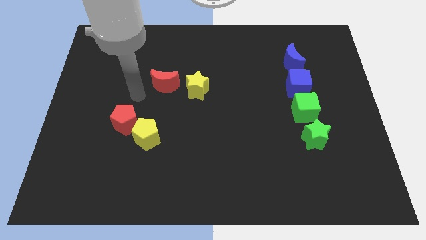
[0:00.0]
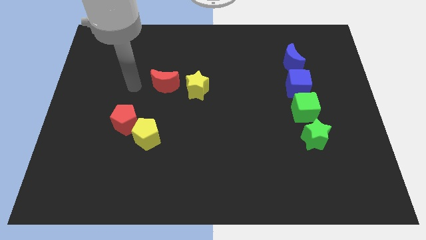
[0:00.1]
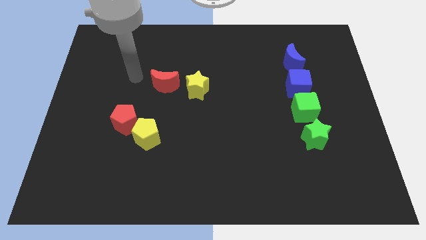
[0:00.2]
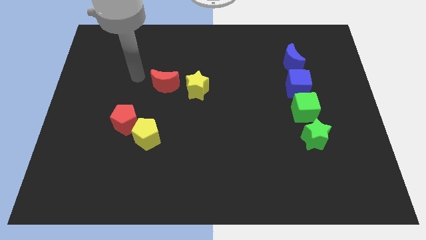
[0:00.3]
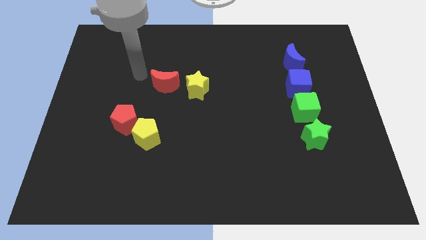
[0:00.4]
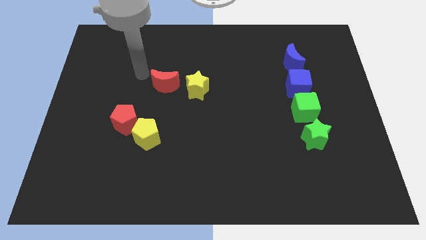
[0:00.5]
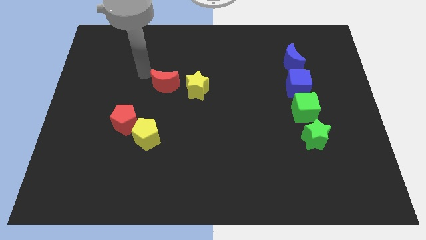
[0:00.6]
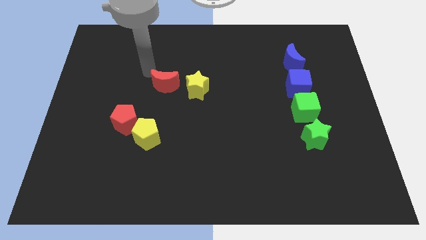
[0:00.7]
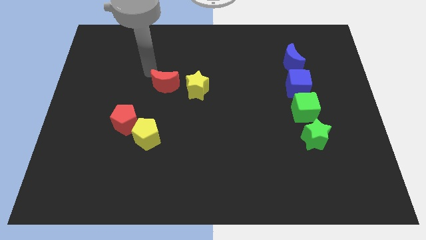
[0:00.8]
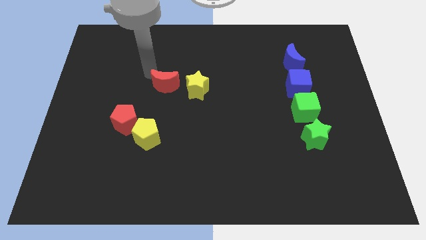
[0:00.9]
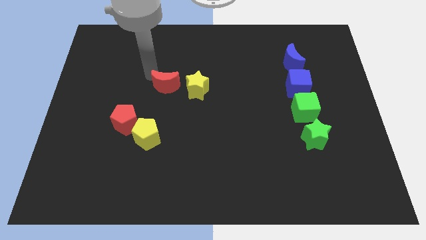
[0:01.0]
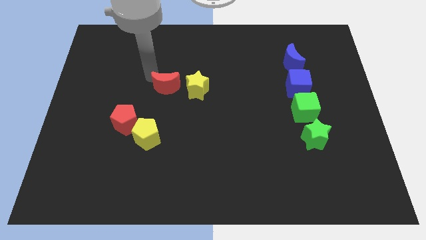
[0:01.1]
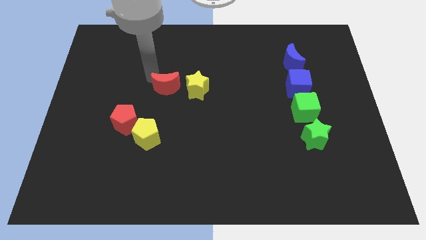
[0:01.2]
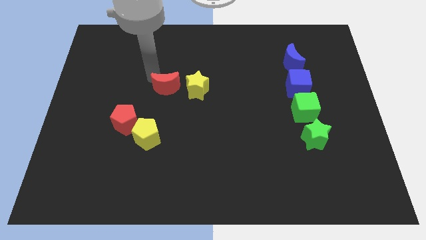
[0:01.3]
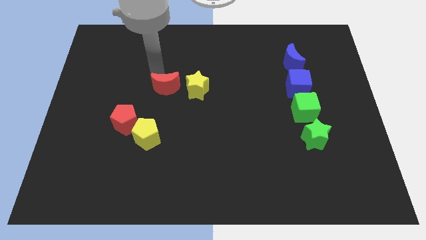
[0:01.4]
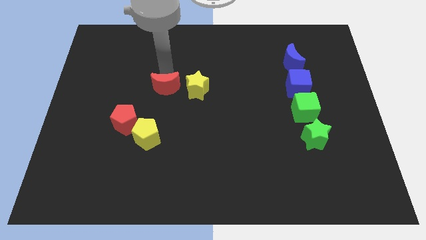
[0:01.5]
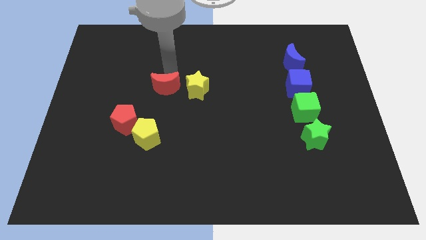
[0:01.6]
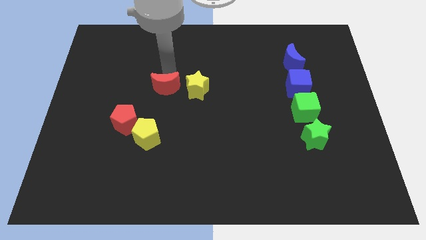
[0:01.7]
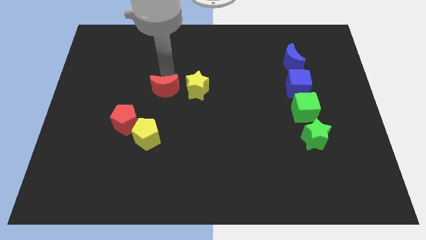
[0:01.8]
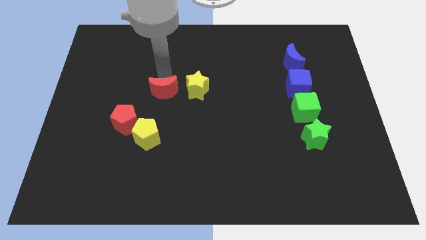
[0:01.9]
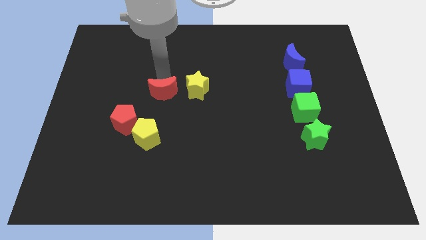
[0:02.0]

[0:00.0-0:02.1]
push the red crescent on the left side of the yellow star

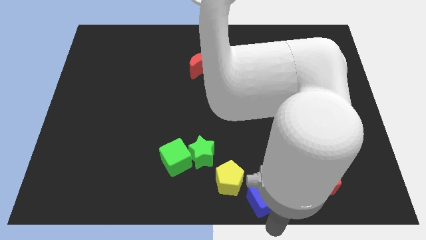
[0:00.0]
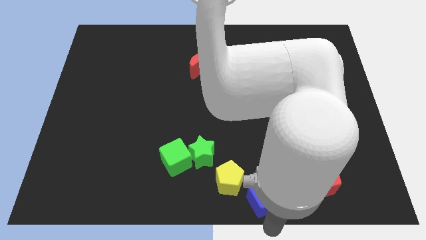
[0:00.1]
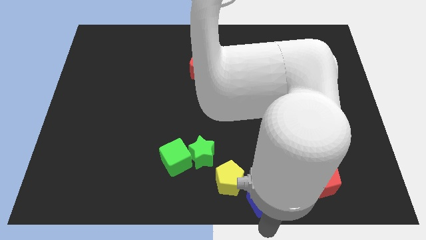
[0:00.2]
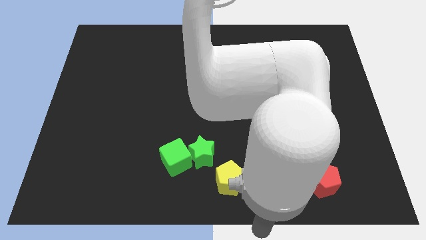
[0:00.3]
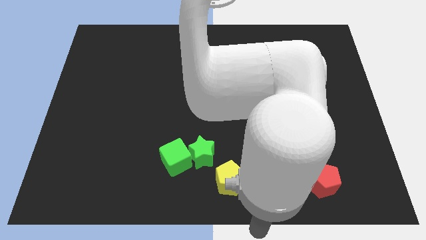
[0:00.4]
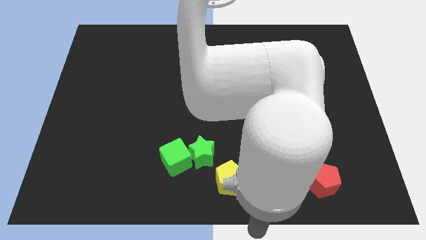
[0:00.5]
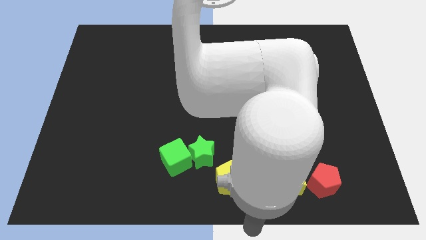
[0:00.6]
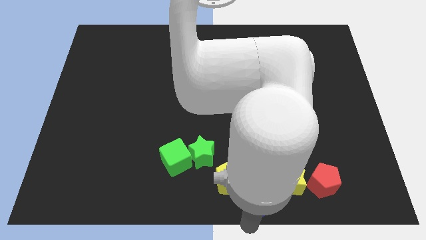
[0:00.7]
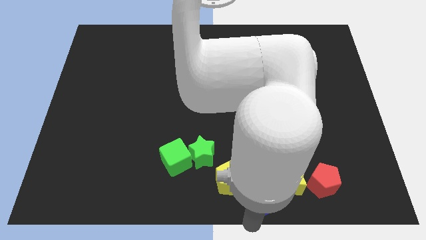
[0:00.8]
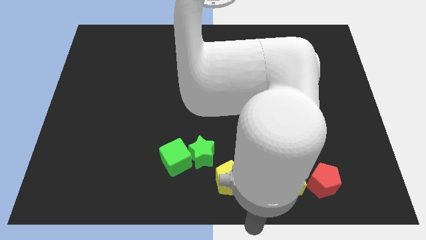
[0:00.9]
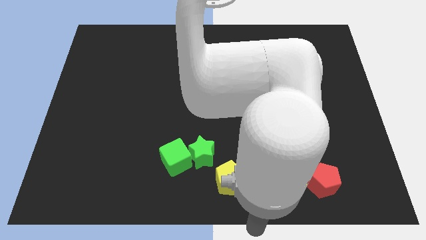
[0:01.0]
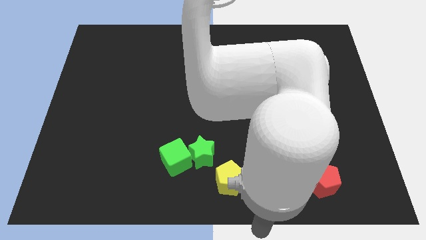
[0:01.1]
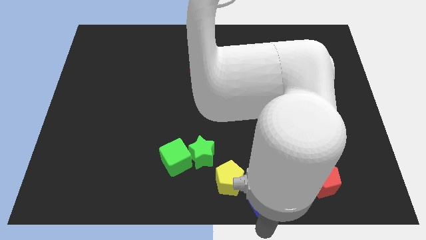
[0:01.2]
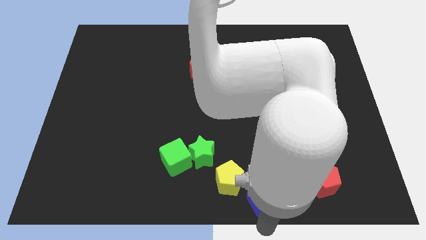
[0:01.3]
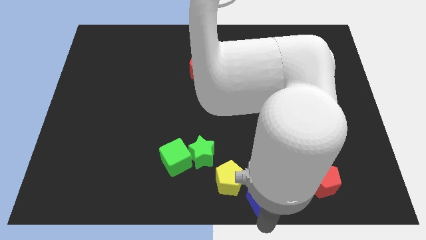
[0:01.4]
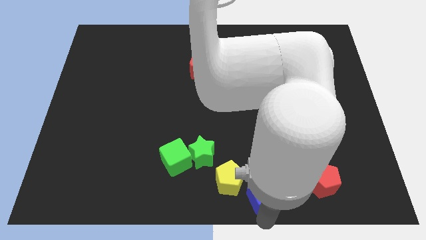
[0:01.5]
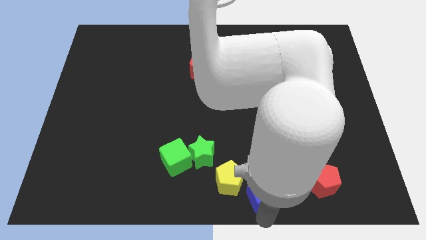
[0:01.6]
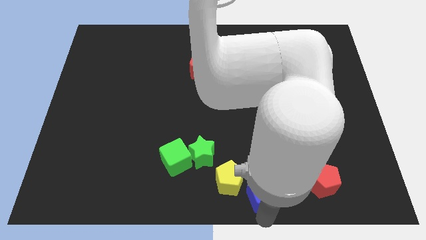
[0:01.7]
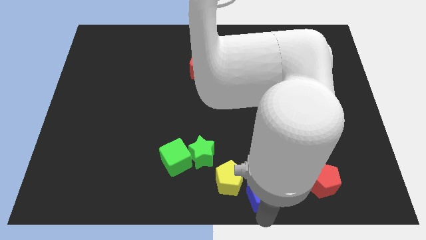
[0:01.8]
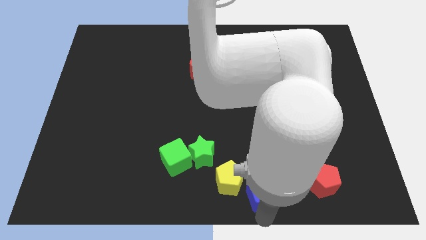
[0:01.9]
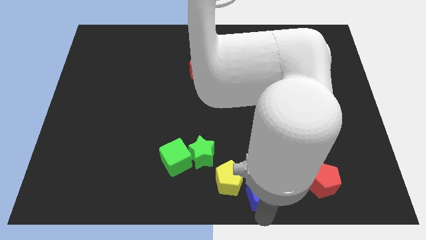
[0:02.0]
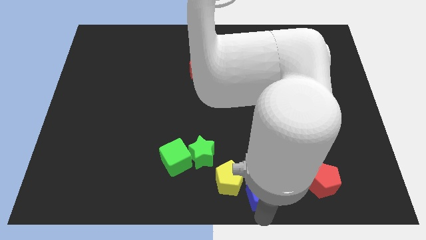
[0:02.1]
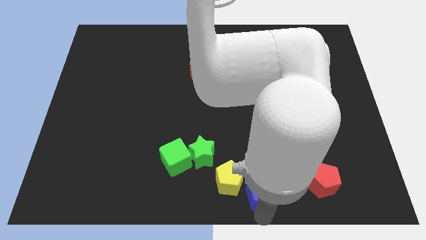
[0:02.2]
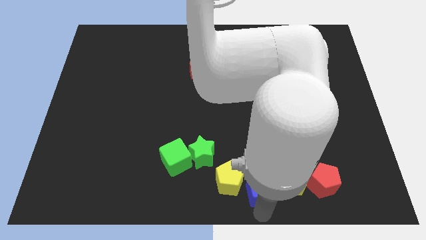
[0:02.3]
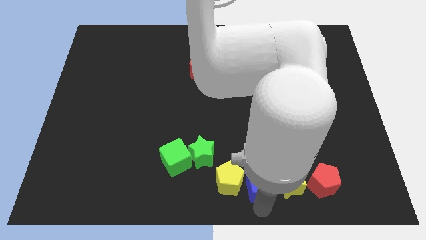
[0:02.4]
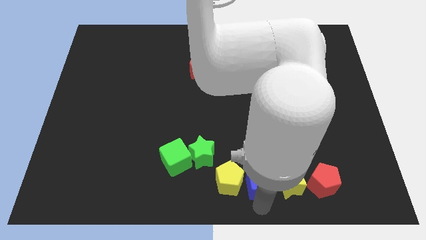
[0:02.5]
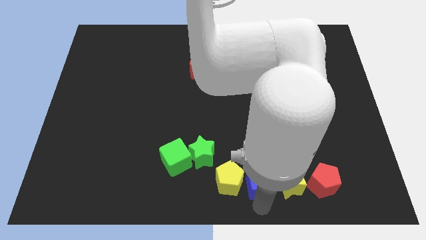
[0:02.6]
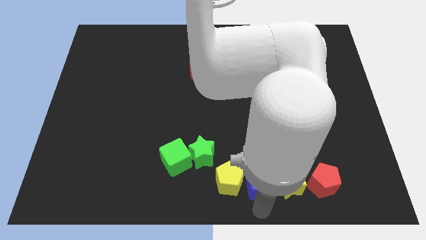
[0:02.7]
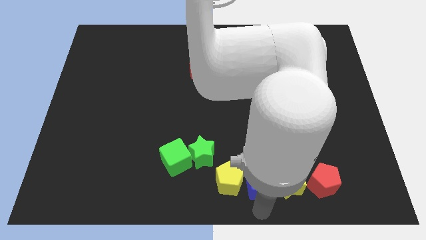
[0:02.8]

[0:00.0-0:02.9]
slightly move the blue cube upwards

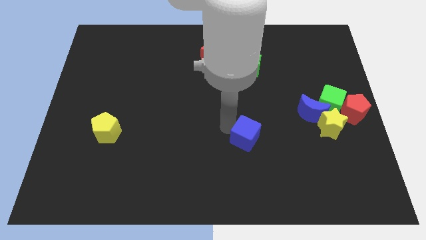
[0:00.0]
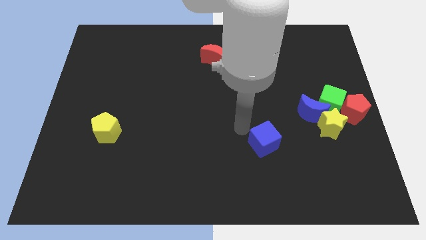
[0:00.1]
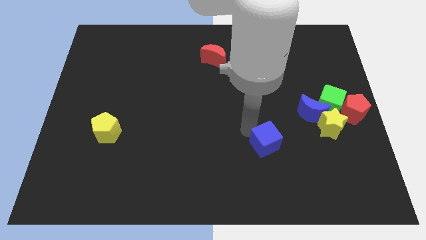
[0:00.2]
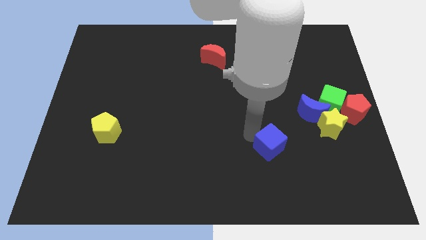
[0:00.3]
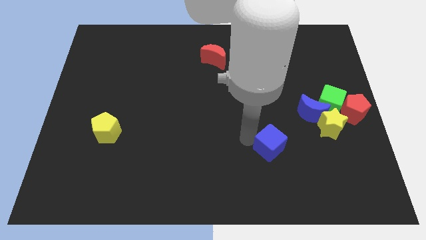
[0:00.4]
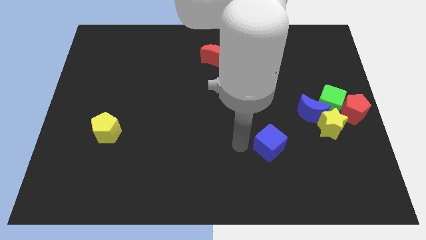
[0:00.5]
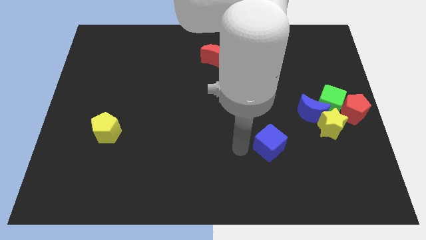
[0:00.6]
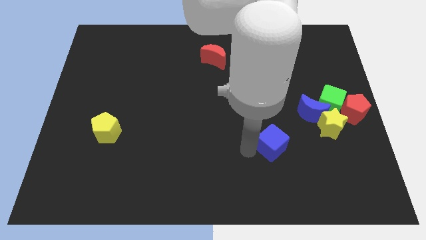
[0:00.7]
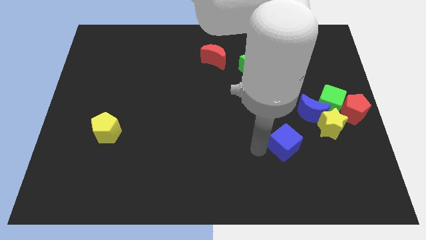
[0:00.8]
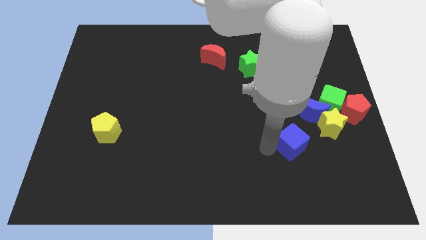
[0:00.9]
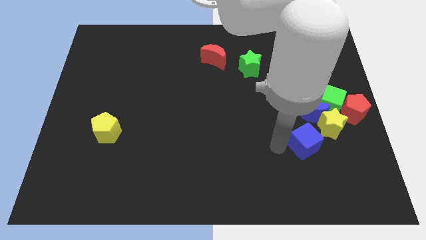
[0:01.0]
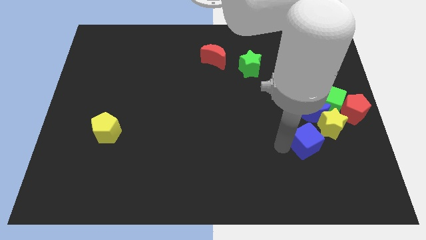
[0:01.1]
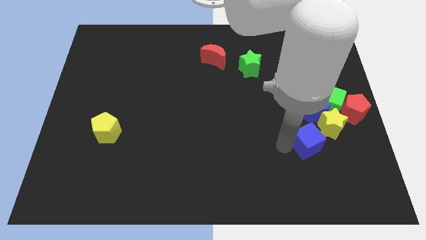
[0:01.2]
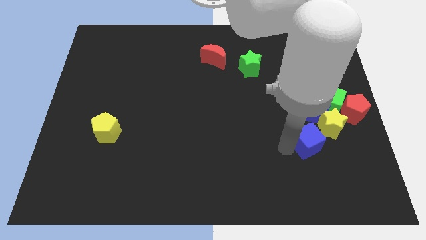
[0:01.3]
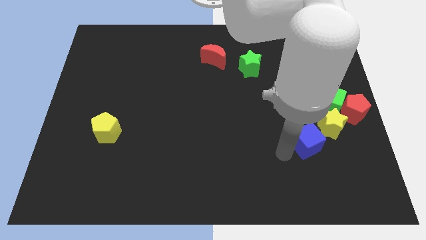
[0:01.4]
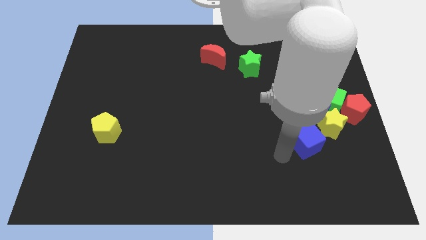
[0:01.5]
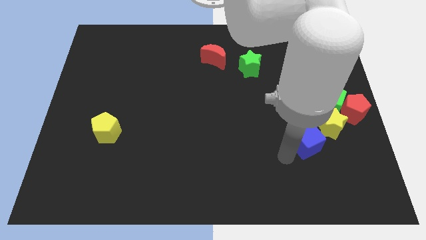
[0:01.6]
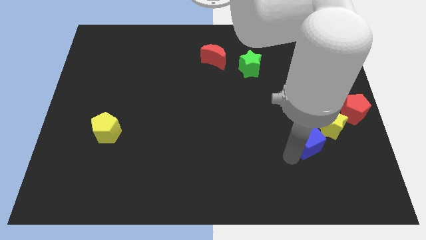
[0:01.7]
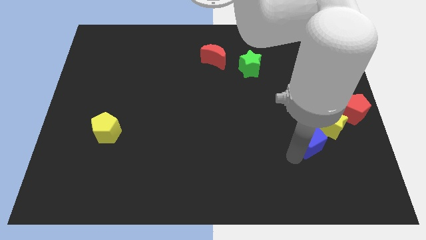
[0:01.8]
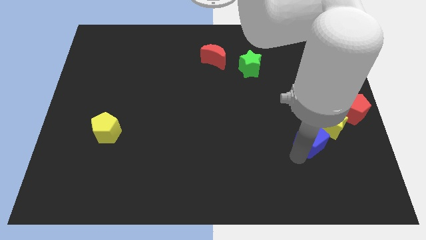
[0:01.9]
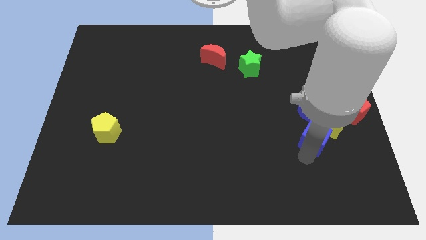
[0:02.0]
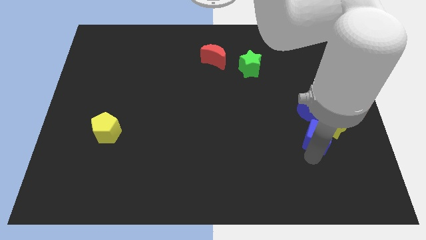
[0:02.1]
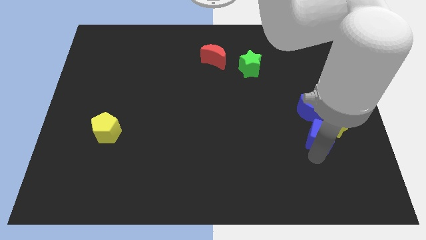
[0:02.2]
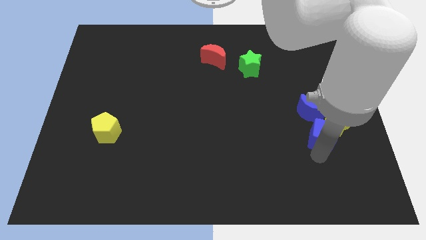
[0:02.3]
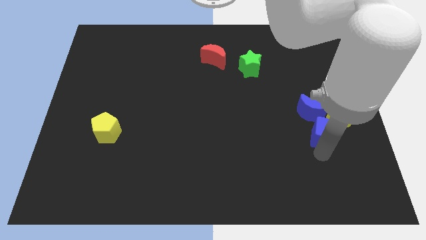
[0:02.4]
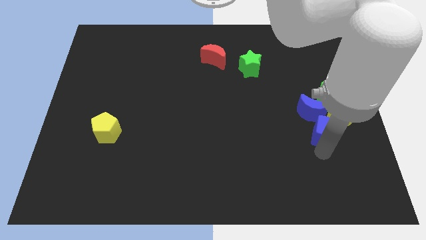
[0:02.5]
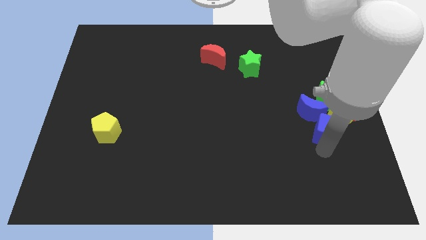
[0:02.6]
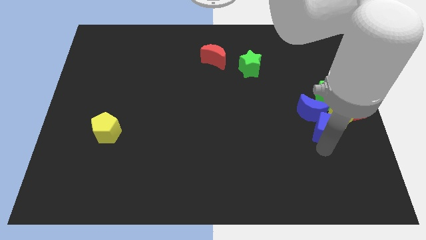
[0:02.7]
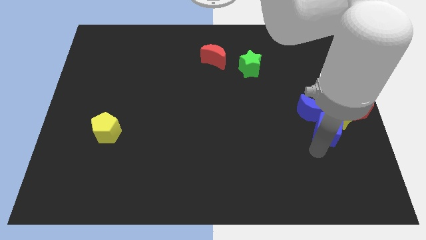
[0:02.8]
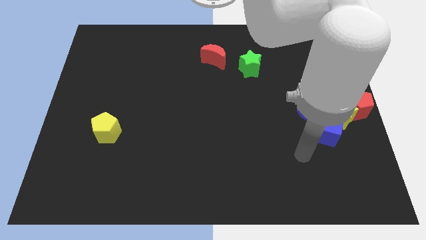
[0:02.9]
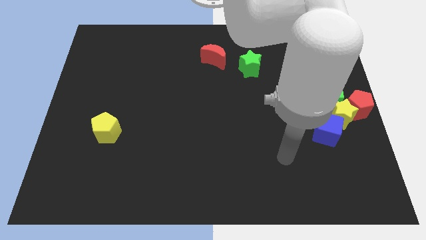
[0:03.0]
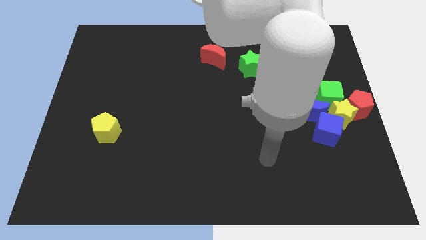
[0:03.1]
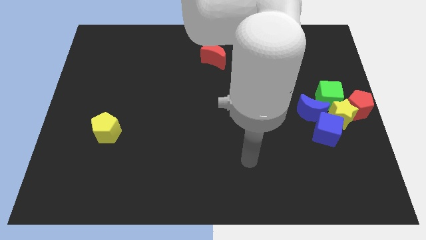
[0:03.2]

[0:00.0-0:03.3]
put the blue cube into group of blocks at right side

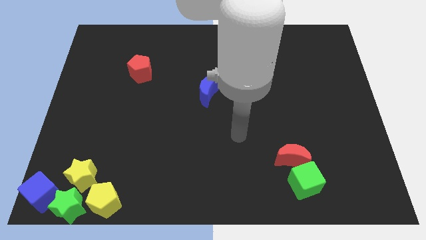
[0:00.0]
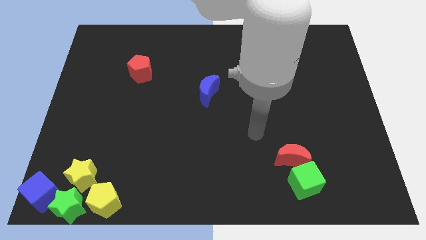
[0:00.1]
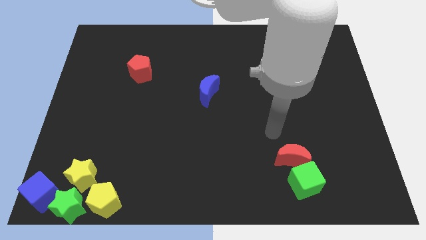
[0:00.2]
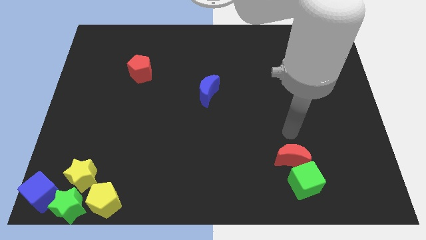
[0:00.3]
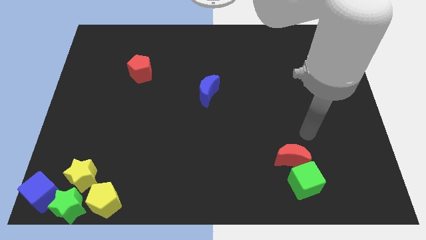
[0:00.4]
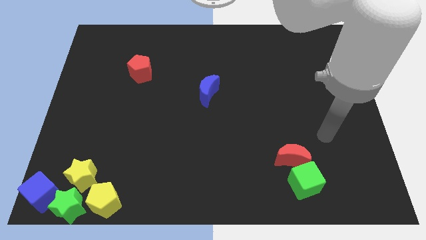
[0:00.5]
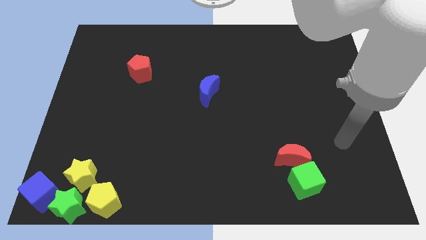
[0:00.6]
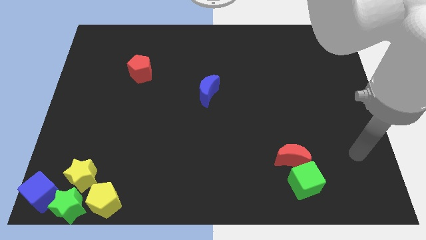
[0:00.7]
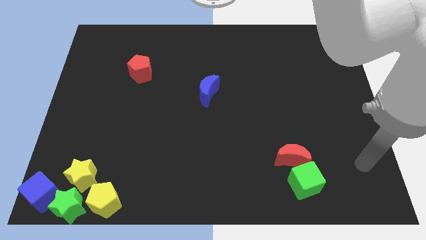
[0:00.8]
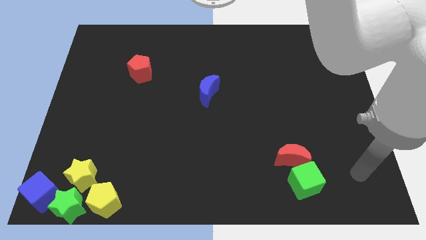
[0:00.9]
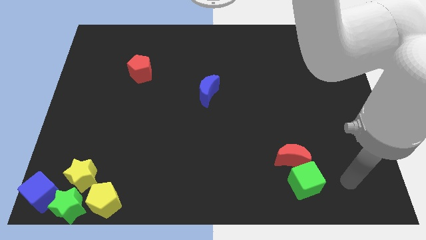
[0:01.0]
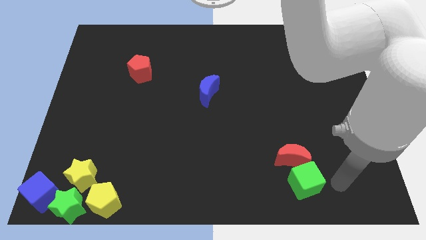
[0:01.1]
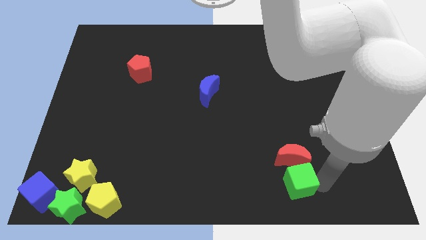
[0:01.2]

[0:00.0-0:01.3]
move the arm to the right of the green cube
